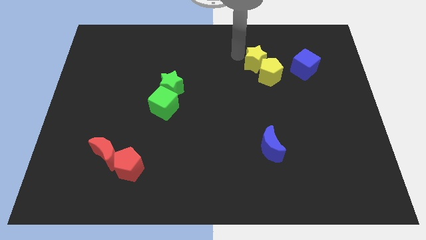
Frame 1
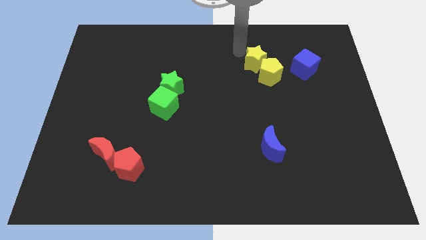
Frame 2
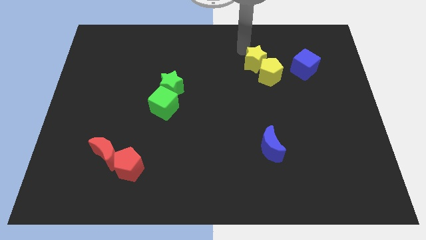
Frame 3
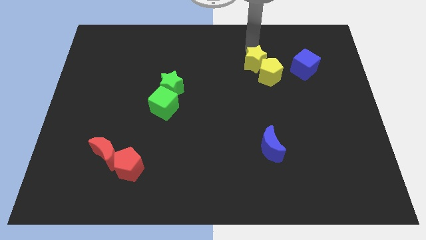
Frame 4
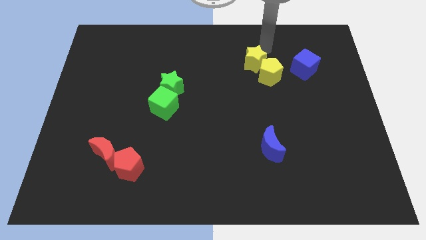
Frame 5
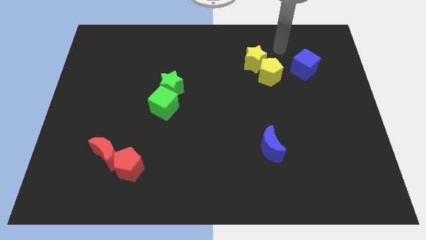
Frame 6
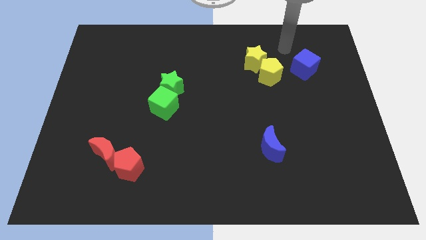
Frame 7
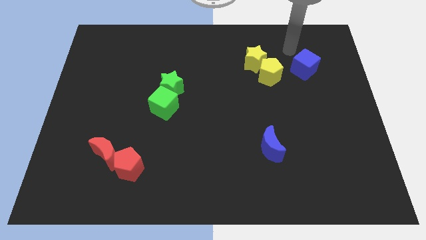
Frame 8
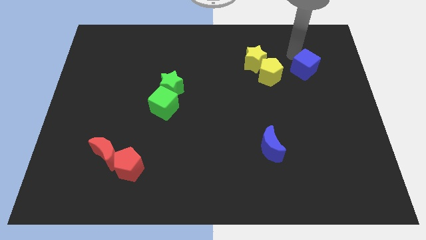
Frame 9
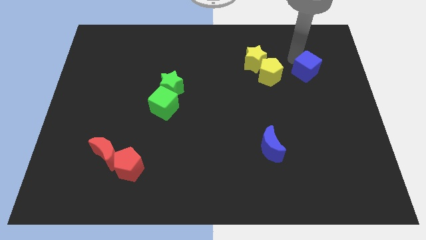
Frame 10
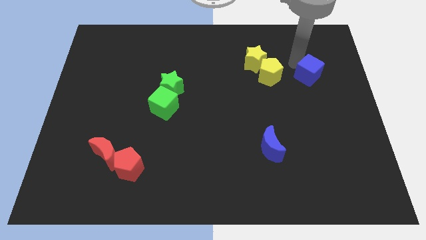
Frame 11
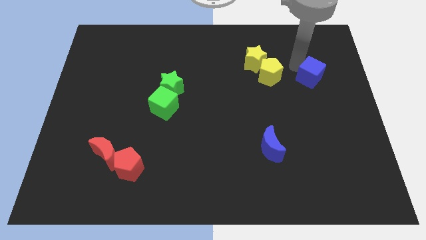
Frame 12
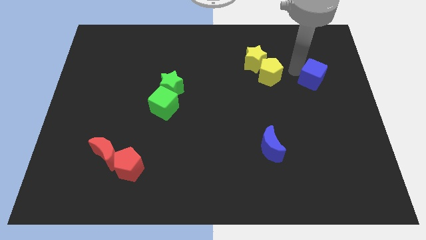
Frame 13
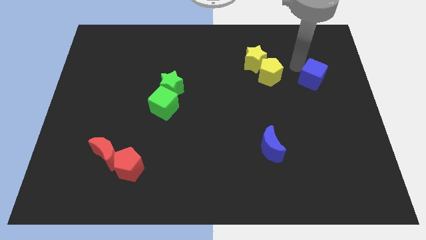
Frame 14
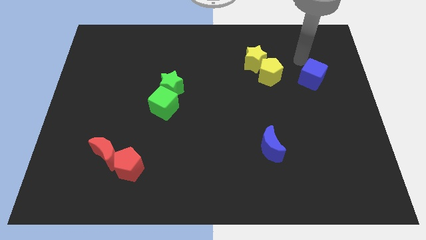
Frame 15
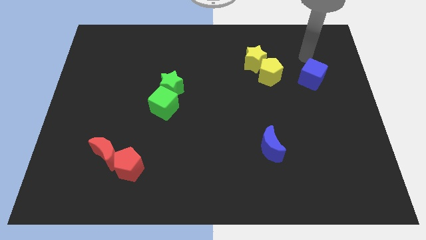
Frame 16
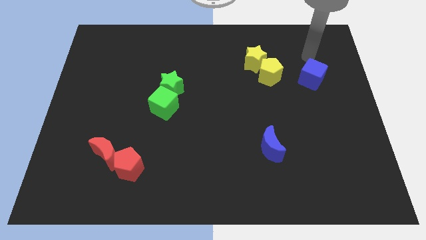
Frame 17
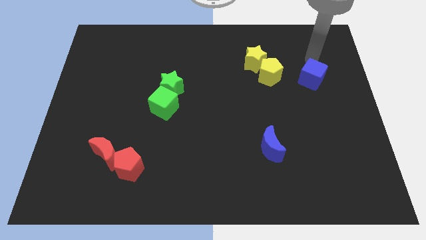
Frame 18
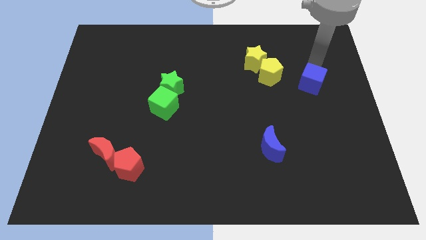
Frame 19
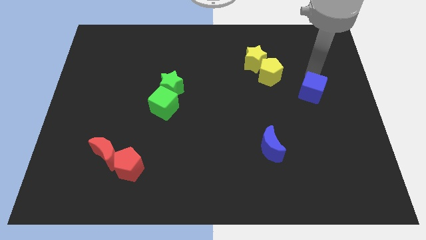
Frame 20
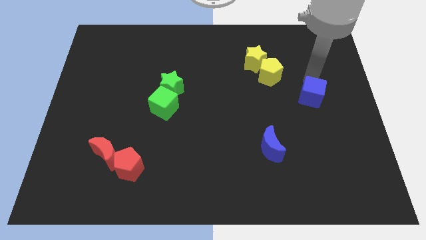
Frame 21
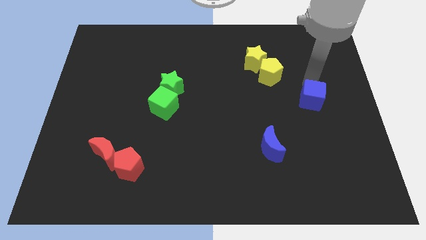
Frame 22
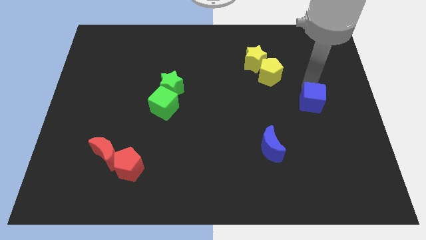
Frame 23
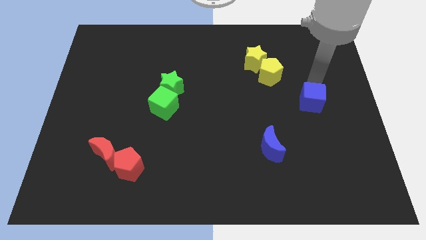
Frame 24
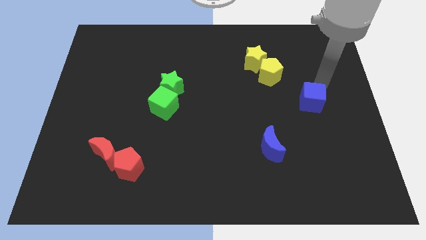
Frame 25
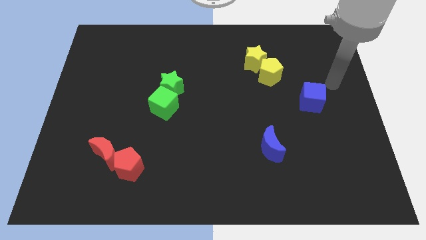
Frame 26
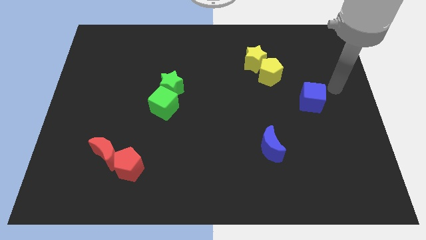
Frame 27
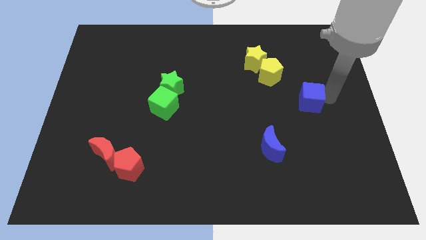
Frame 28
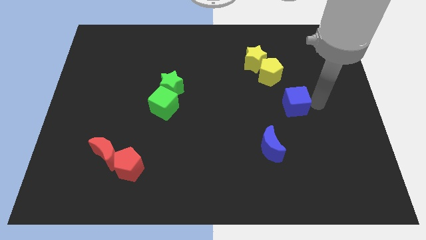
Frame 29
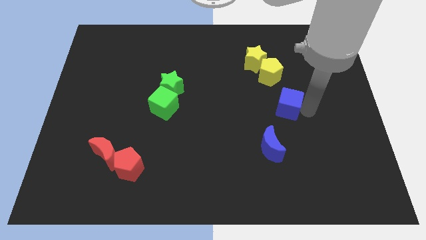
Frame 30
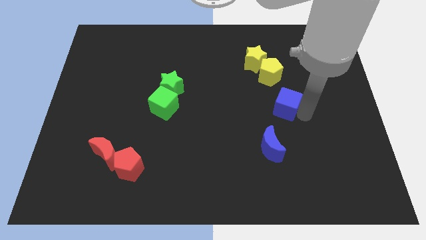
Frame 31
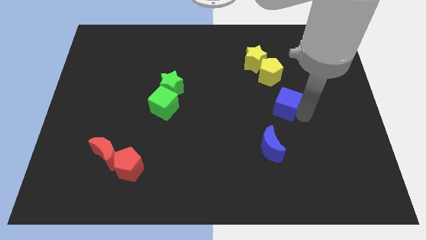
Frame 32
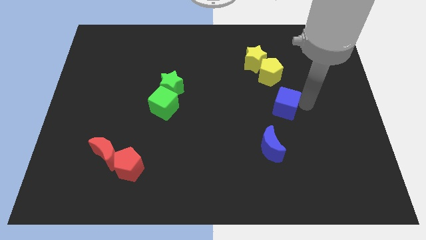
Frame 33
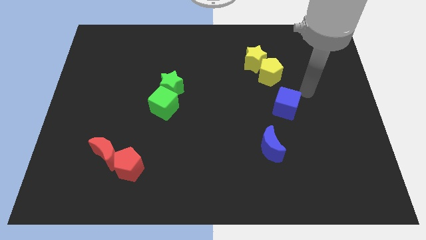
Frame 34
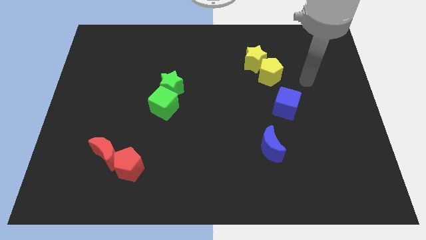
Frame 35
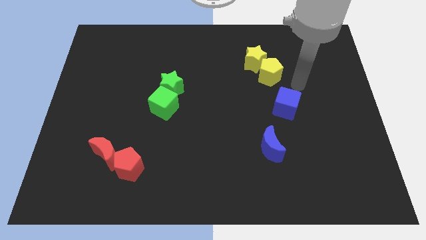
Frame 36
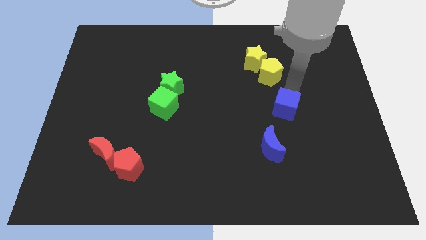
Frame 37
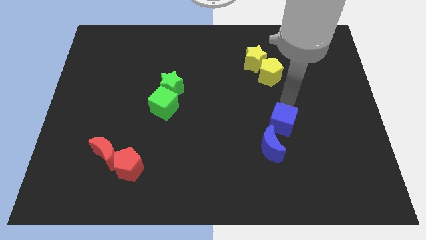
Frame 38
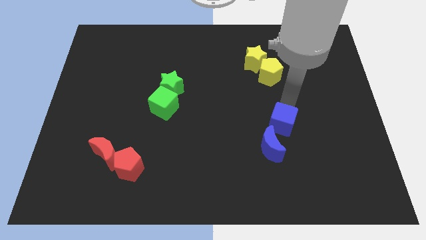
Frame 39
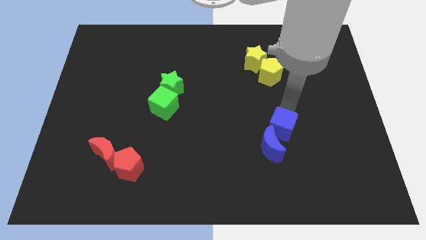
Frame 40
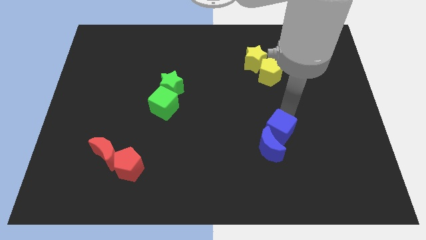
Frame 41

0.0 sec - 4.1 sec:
push the blue cube into the blue moon

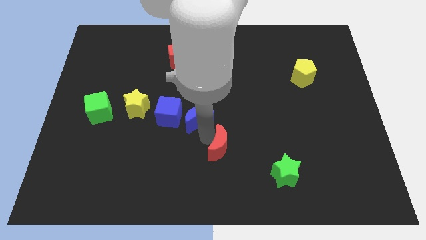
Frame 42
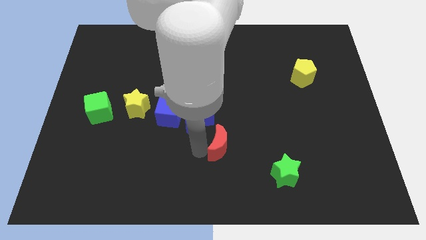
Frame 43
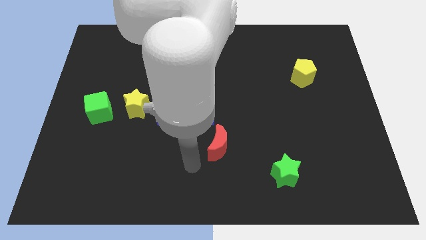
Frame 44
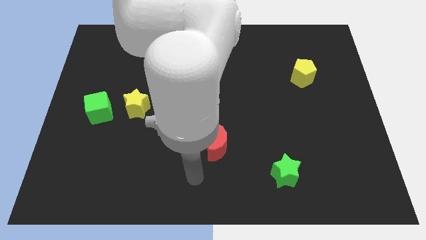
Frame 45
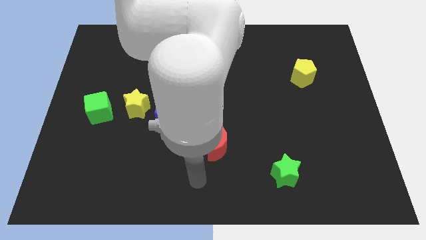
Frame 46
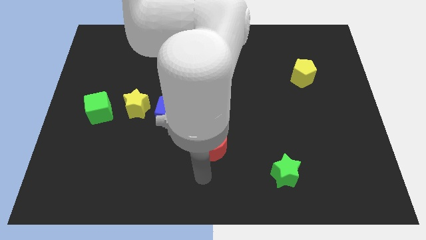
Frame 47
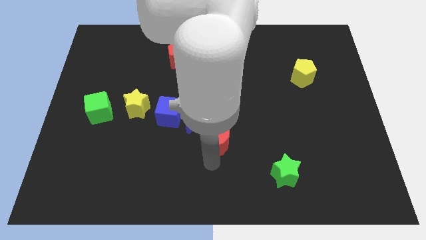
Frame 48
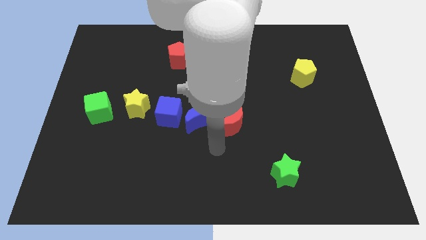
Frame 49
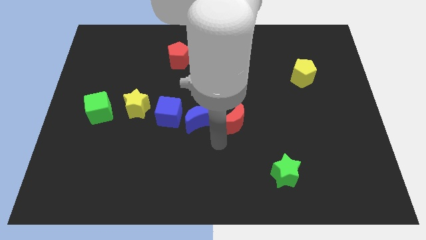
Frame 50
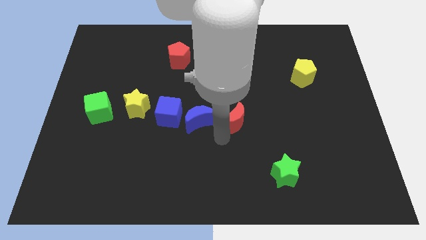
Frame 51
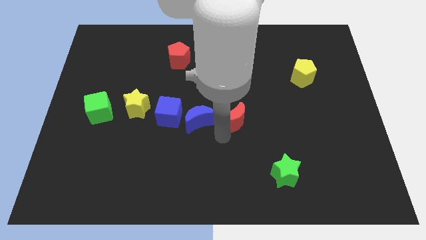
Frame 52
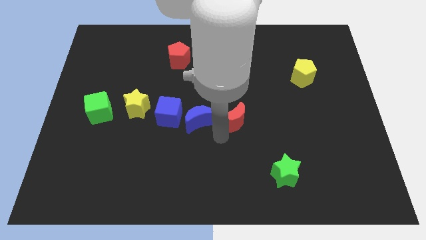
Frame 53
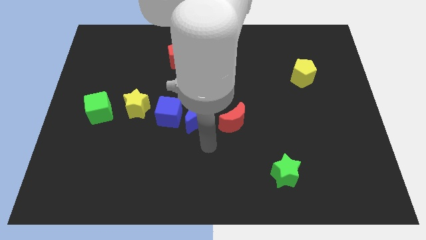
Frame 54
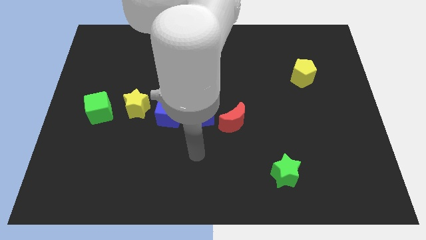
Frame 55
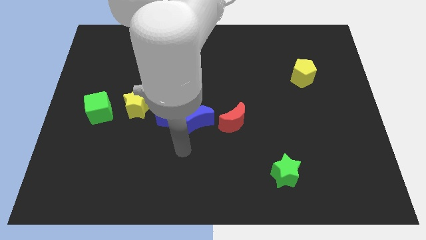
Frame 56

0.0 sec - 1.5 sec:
place the red crescent to the right of the blue crescent

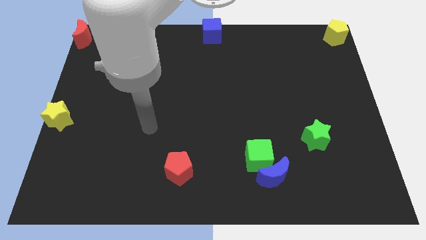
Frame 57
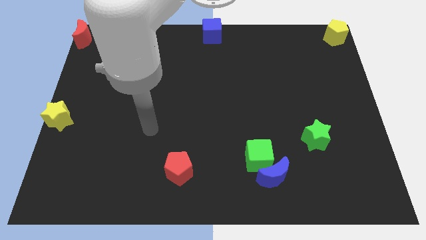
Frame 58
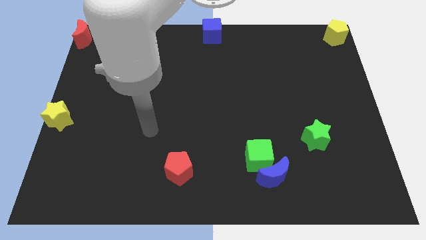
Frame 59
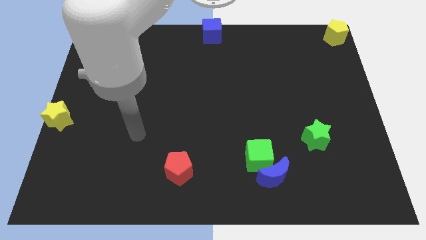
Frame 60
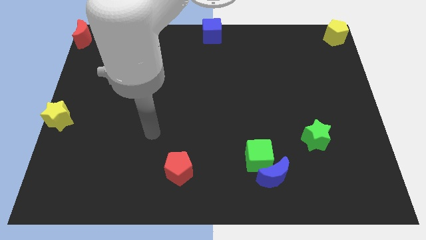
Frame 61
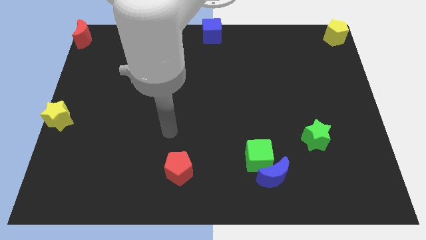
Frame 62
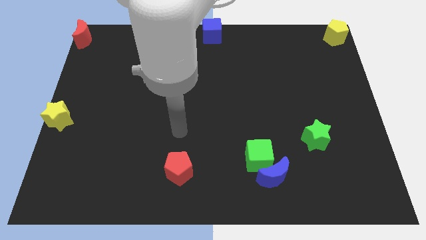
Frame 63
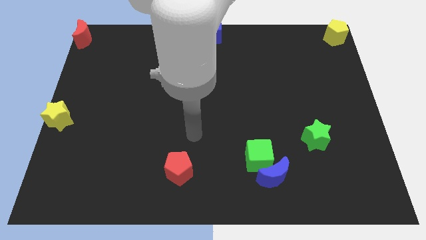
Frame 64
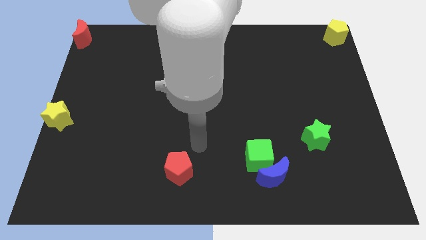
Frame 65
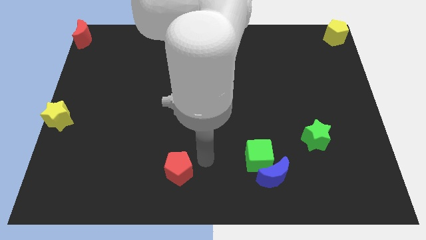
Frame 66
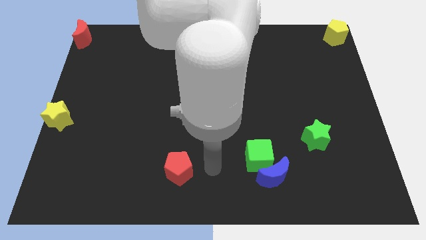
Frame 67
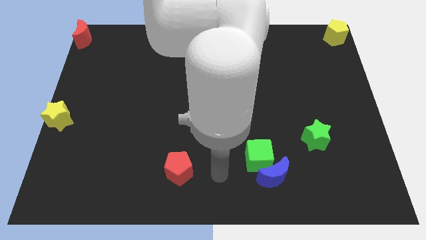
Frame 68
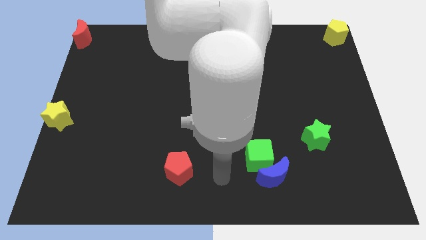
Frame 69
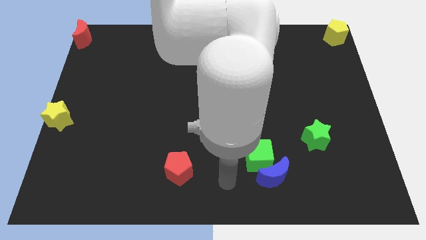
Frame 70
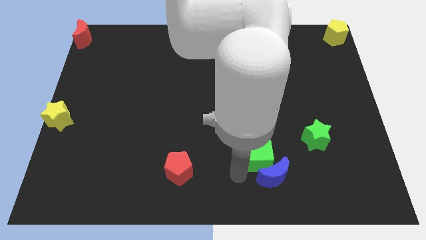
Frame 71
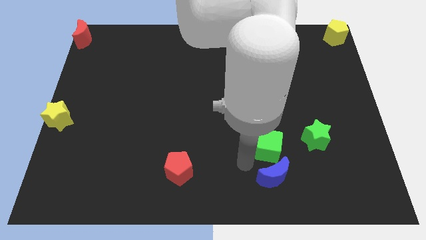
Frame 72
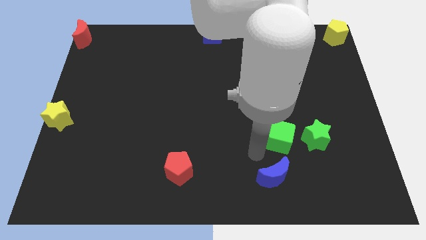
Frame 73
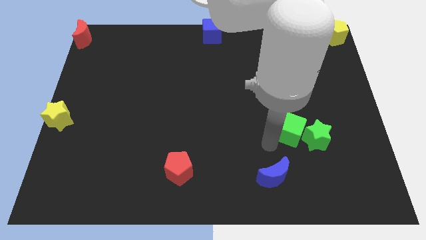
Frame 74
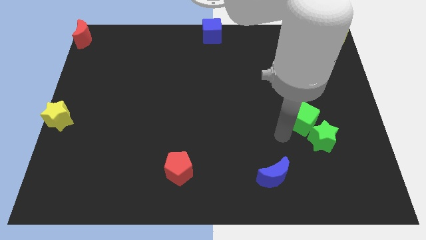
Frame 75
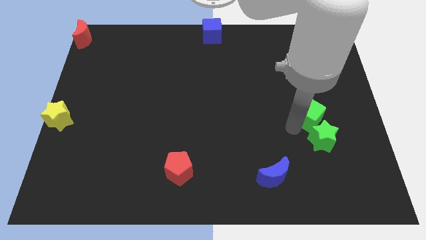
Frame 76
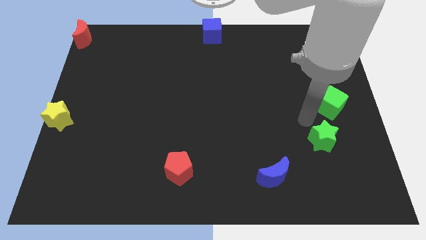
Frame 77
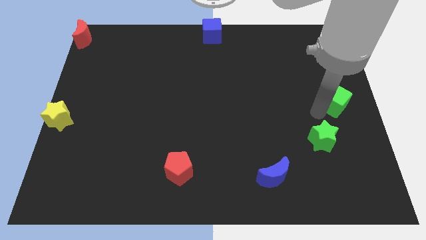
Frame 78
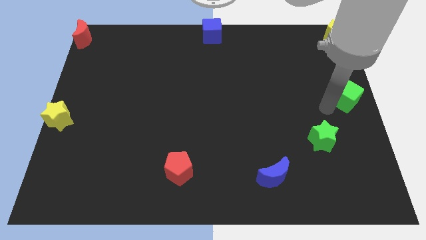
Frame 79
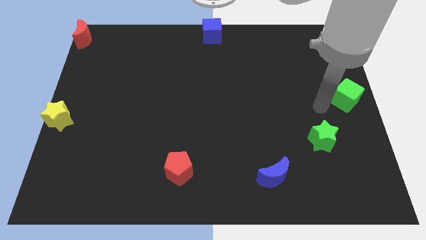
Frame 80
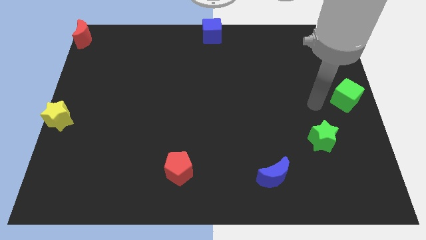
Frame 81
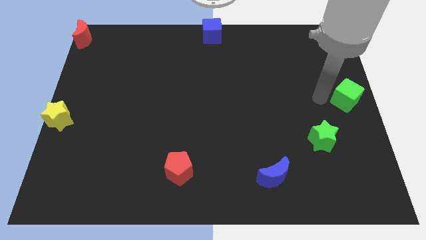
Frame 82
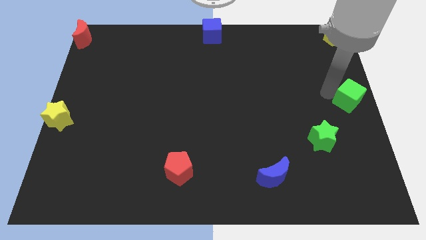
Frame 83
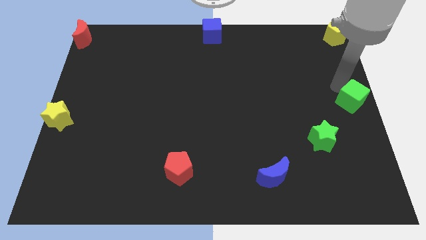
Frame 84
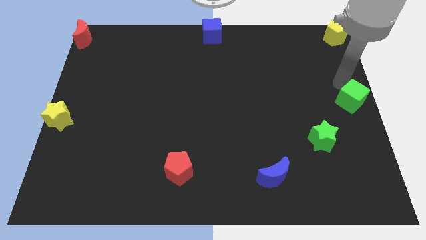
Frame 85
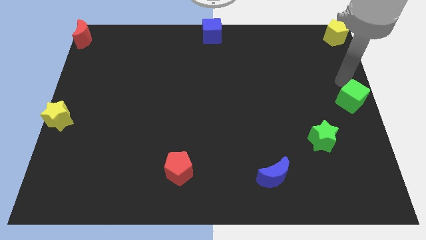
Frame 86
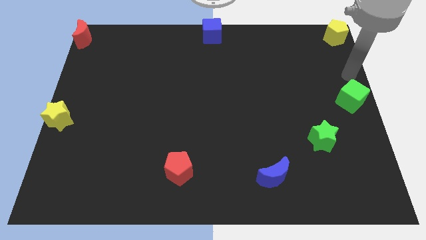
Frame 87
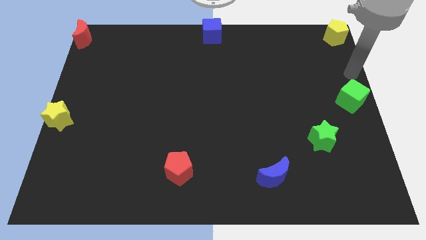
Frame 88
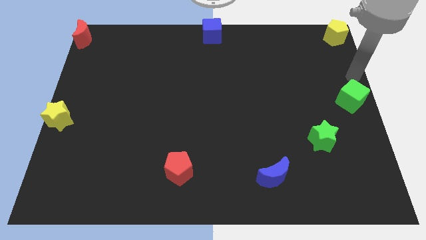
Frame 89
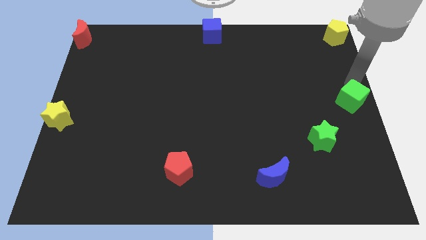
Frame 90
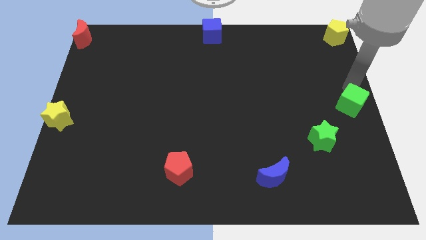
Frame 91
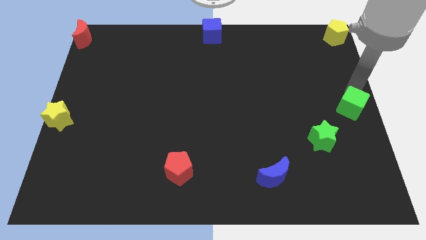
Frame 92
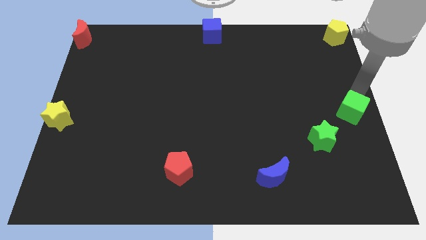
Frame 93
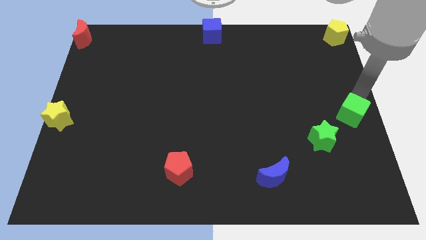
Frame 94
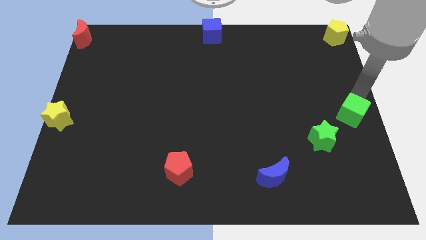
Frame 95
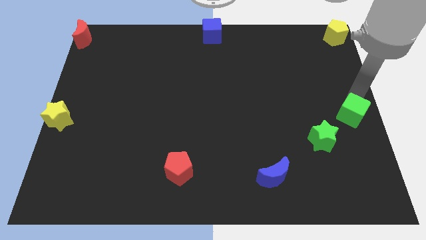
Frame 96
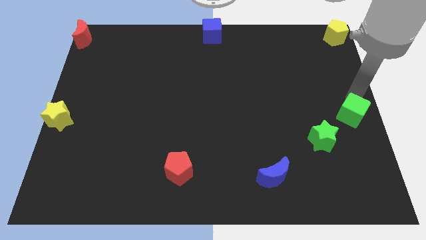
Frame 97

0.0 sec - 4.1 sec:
push the green cube to the center right
